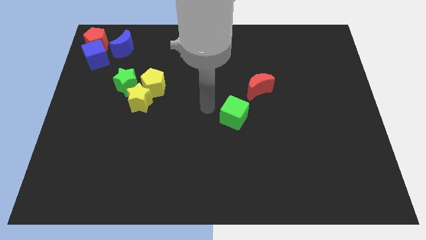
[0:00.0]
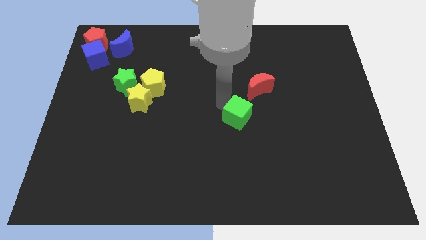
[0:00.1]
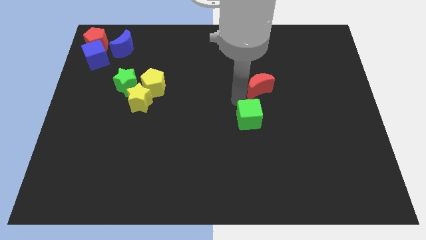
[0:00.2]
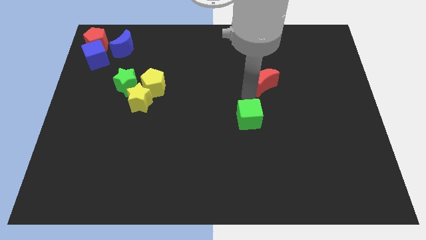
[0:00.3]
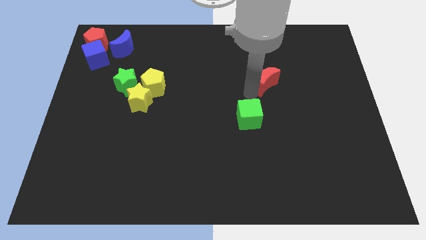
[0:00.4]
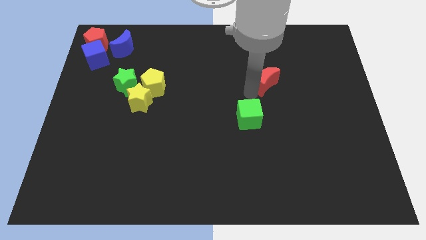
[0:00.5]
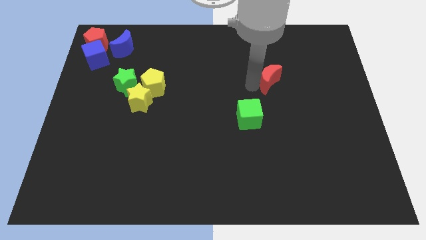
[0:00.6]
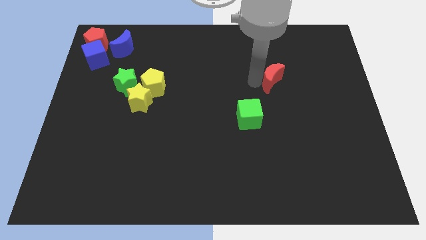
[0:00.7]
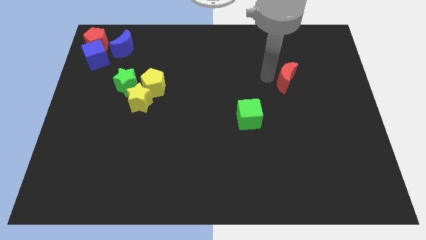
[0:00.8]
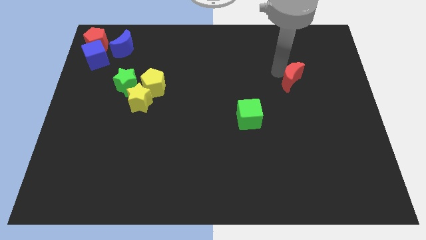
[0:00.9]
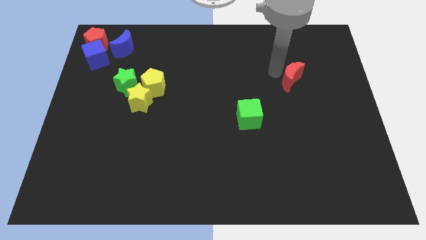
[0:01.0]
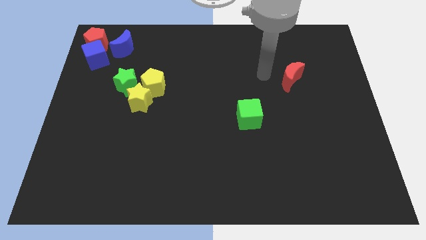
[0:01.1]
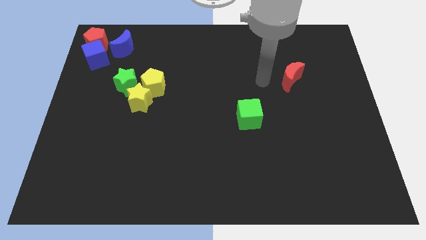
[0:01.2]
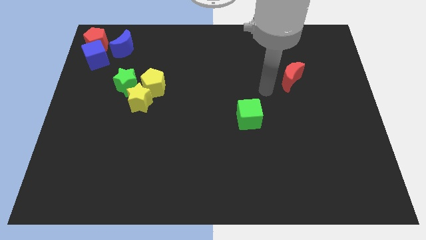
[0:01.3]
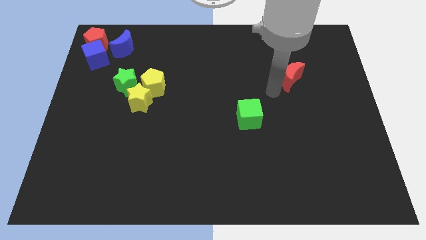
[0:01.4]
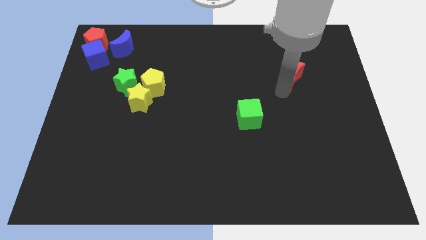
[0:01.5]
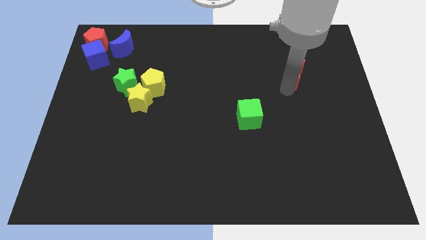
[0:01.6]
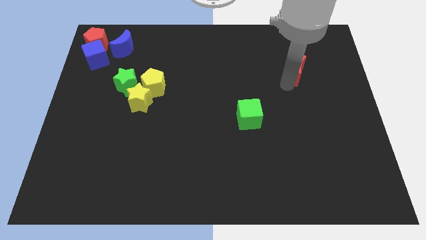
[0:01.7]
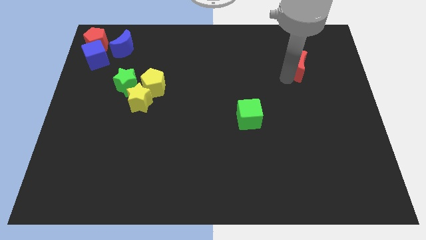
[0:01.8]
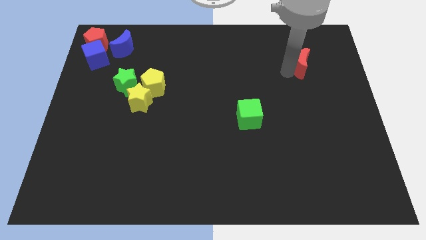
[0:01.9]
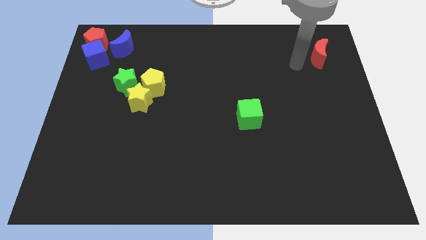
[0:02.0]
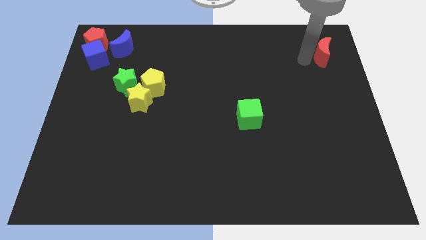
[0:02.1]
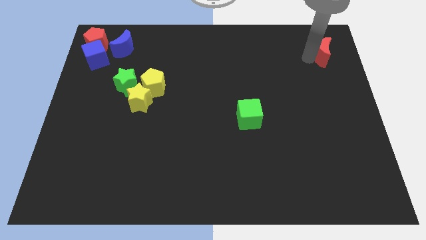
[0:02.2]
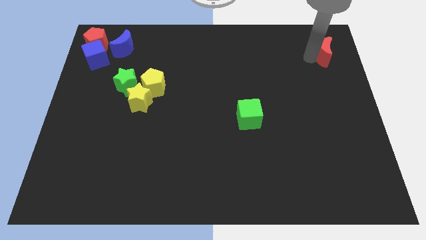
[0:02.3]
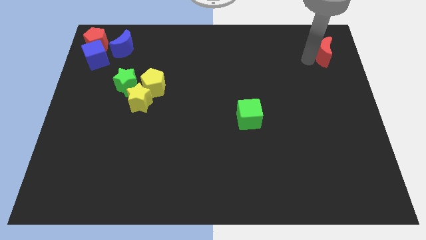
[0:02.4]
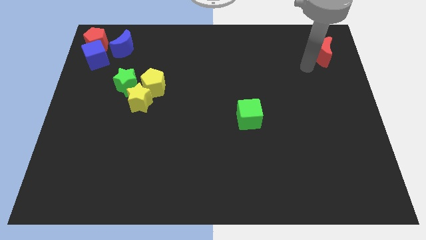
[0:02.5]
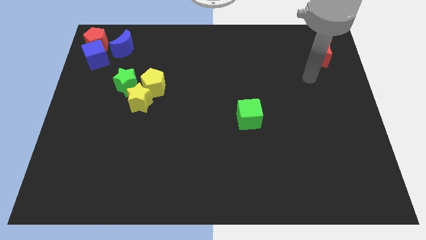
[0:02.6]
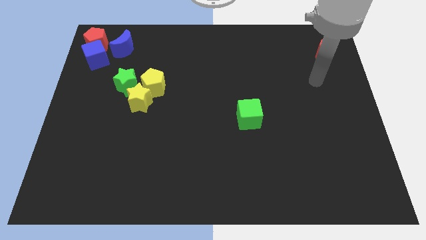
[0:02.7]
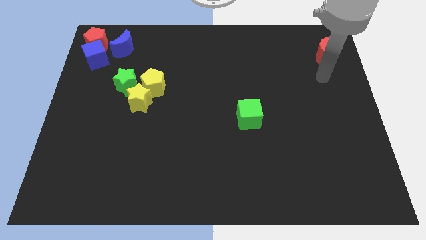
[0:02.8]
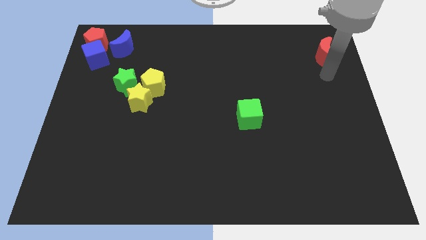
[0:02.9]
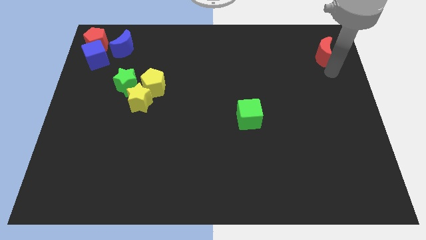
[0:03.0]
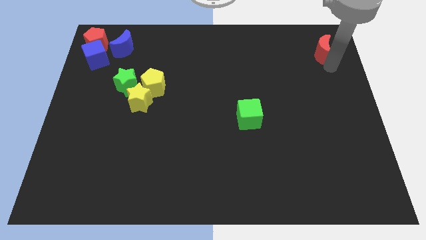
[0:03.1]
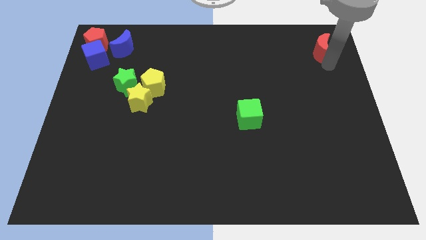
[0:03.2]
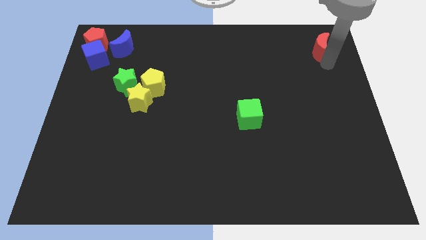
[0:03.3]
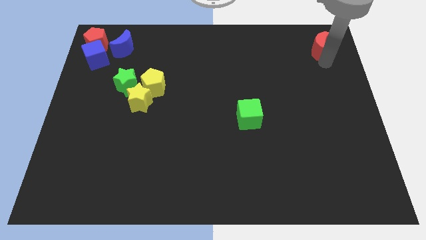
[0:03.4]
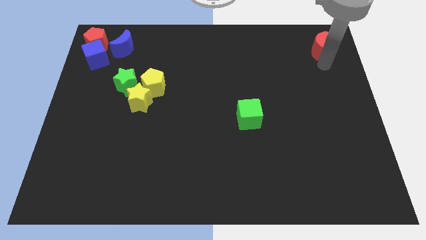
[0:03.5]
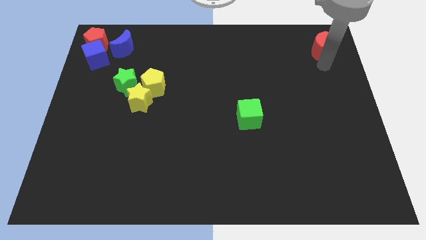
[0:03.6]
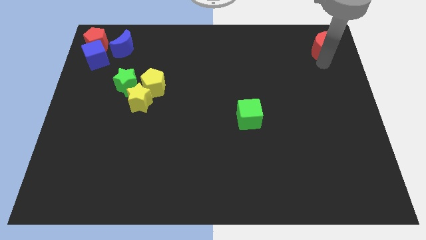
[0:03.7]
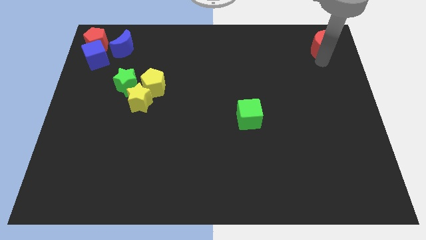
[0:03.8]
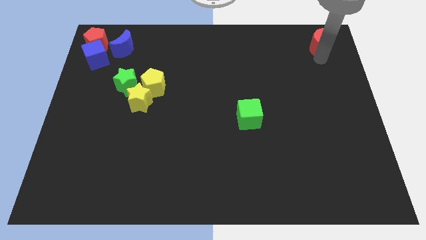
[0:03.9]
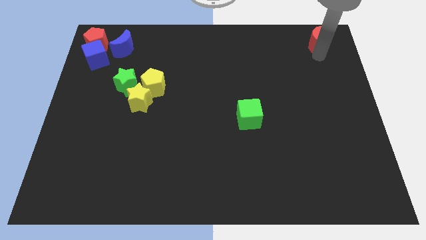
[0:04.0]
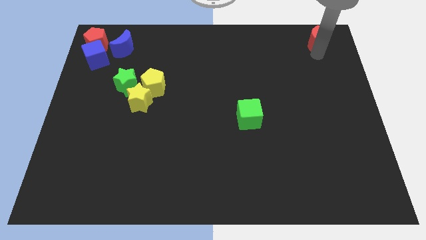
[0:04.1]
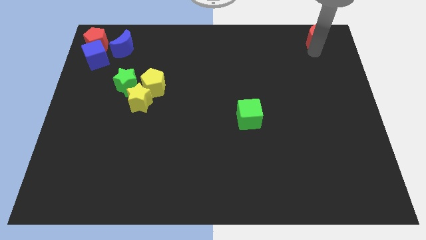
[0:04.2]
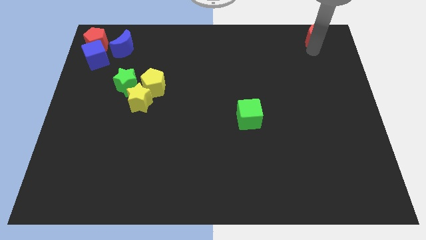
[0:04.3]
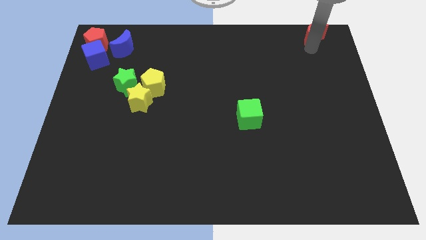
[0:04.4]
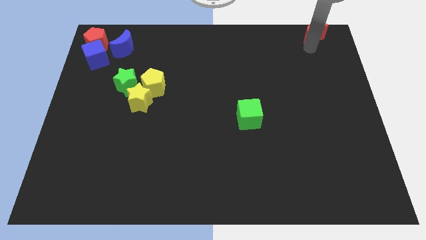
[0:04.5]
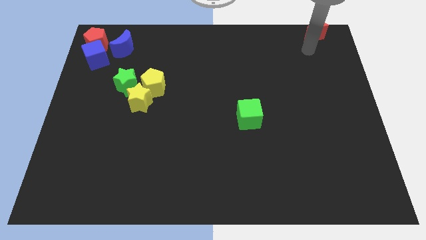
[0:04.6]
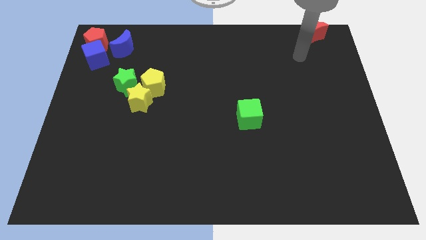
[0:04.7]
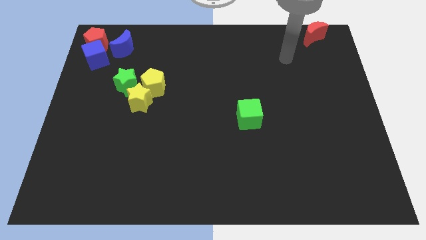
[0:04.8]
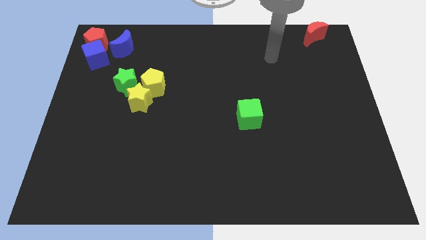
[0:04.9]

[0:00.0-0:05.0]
move the red crecent to the top right corner

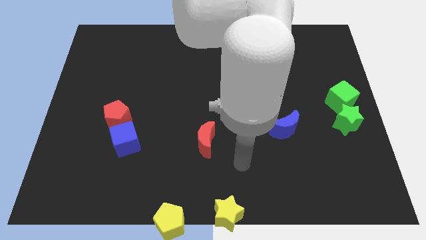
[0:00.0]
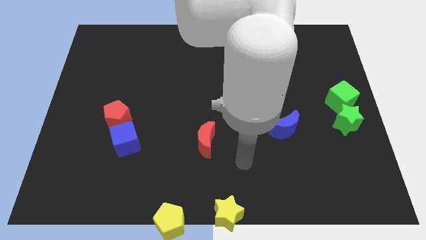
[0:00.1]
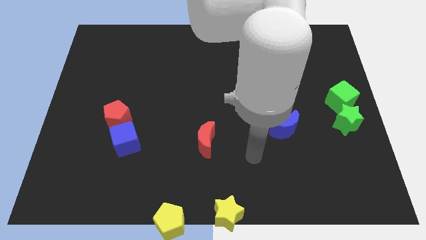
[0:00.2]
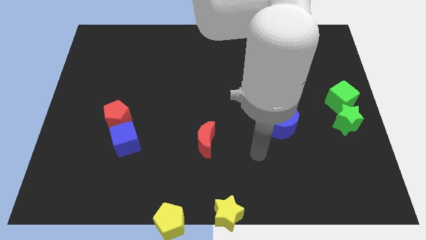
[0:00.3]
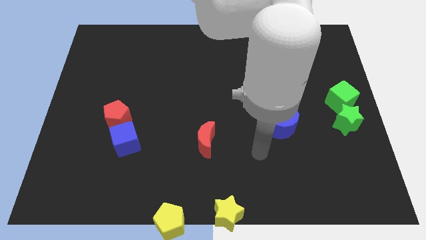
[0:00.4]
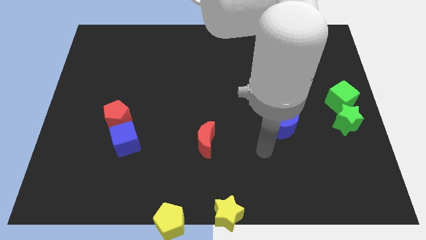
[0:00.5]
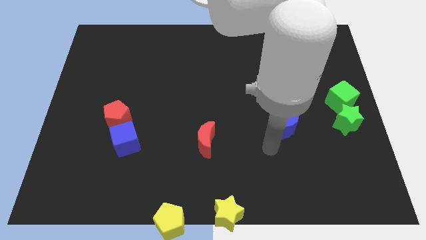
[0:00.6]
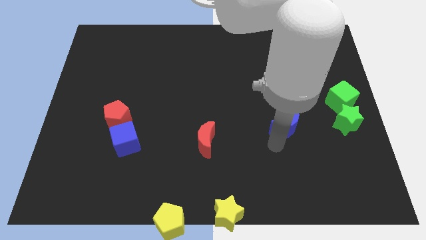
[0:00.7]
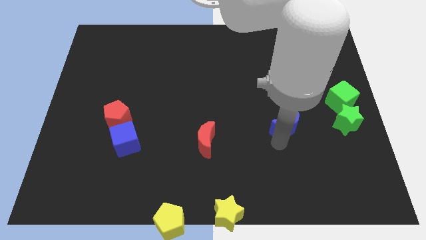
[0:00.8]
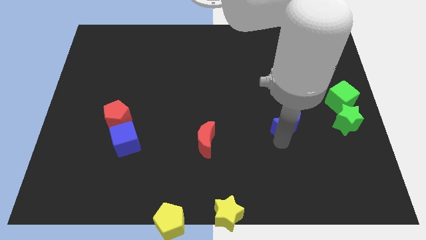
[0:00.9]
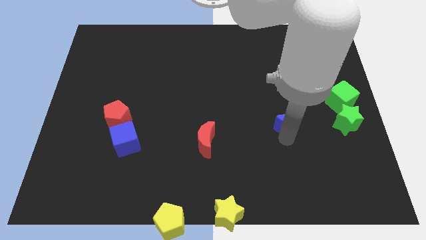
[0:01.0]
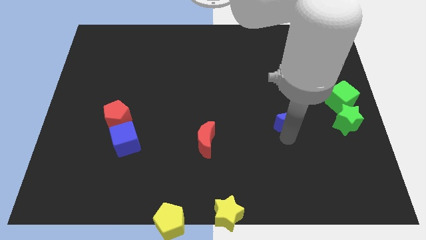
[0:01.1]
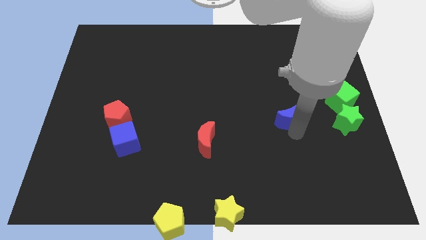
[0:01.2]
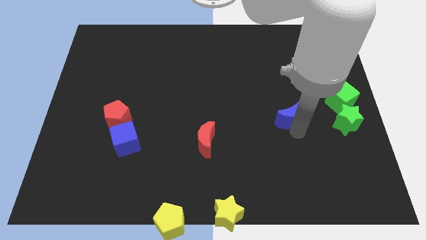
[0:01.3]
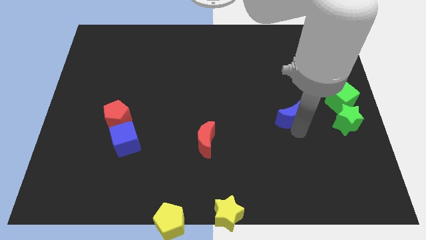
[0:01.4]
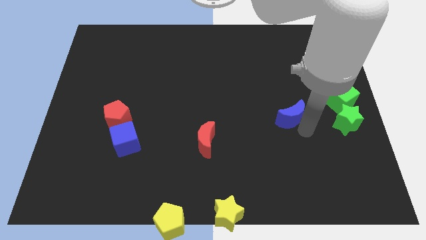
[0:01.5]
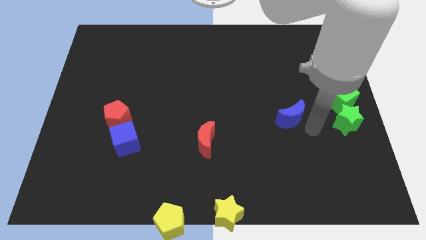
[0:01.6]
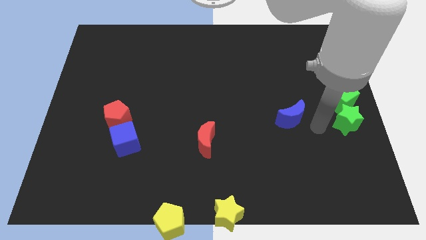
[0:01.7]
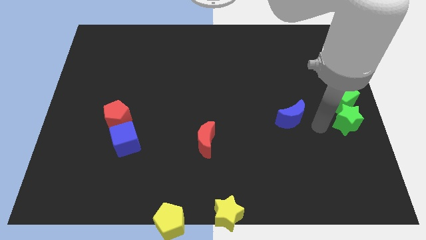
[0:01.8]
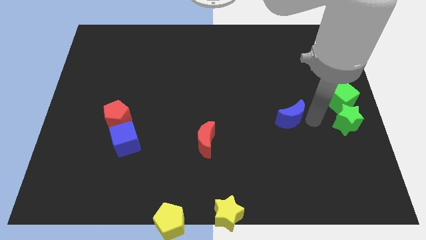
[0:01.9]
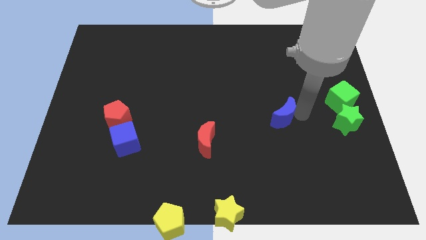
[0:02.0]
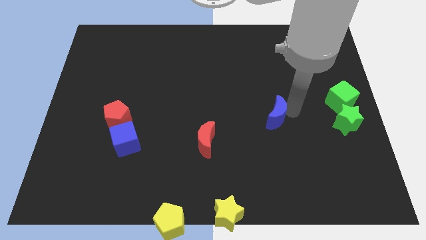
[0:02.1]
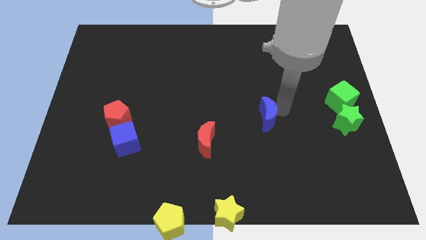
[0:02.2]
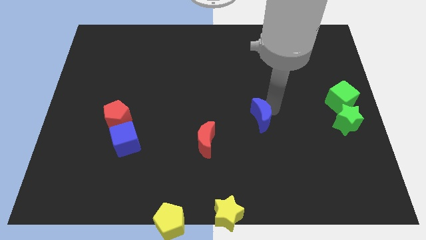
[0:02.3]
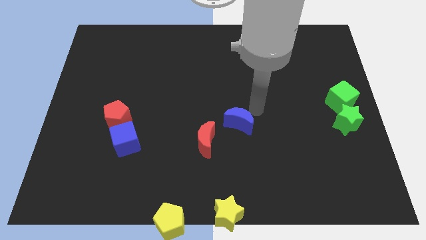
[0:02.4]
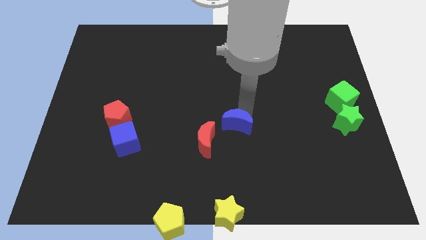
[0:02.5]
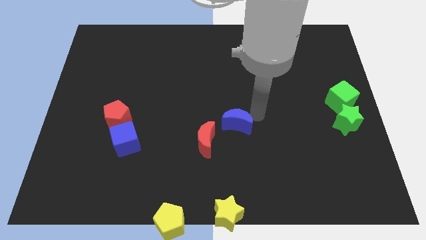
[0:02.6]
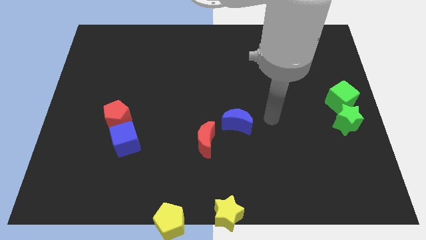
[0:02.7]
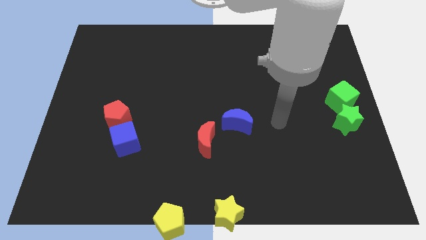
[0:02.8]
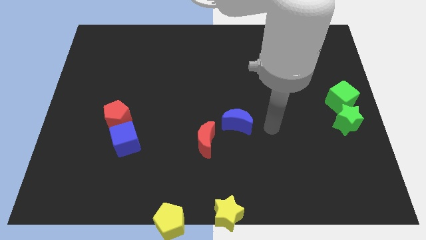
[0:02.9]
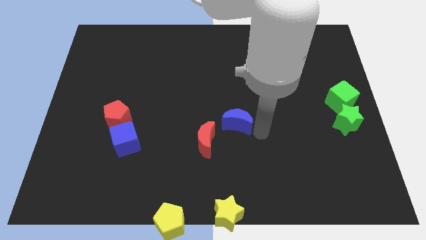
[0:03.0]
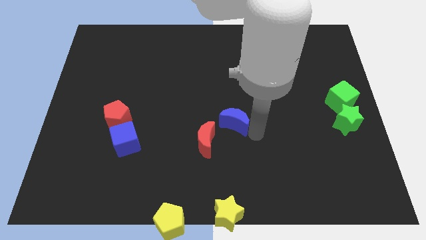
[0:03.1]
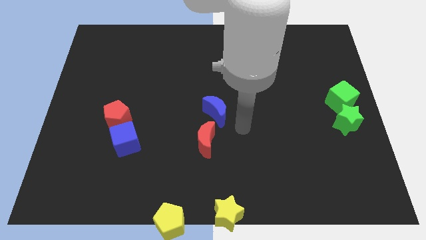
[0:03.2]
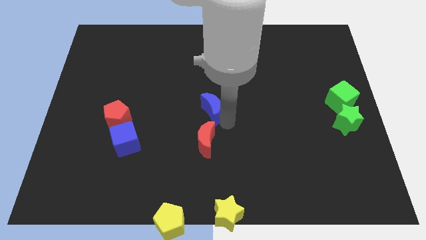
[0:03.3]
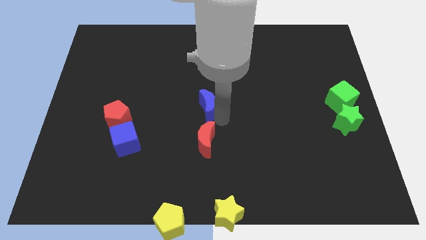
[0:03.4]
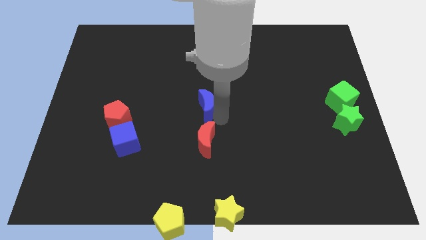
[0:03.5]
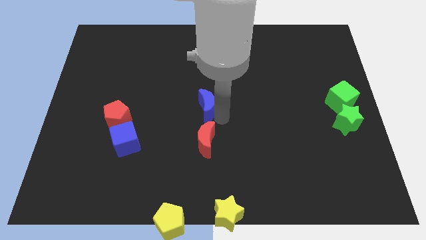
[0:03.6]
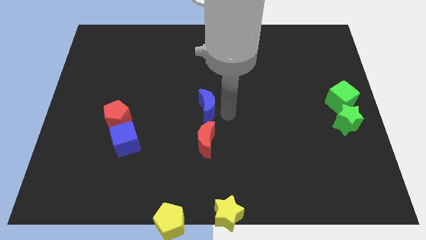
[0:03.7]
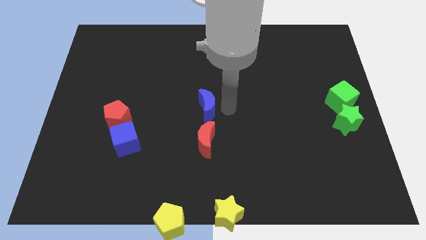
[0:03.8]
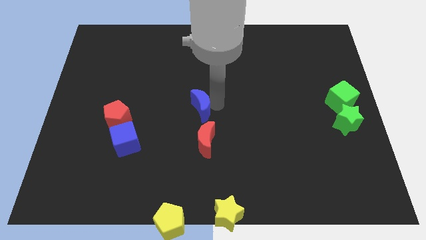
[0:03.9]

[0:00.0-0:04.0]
place the blue moon above the red moon

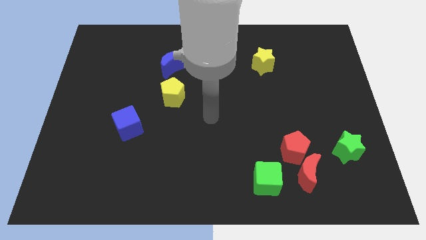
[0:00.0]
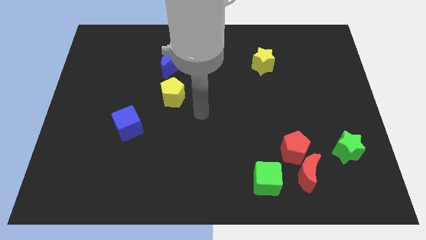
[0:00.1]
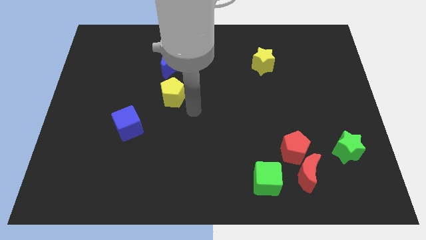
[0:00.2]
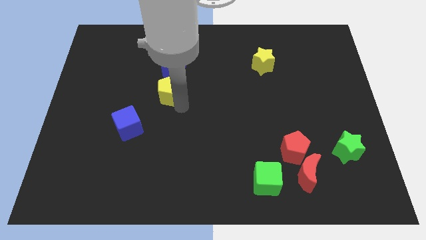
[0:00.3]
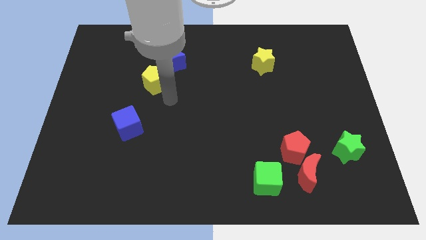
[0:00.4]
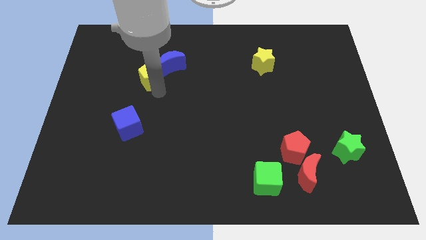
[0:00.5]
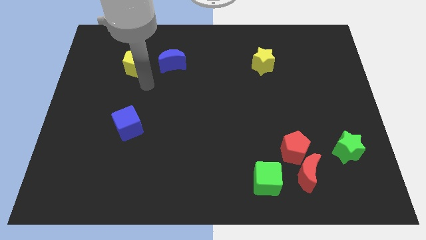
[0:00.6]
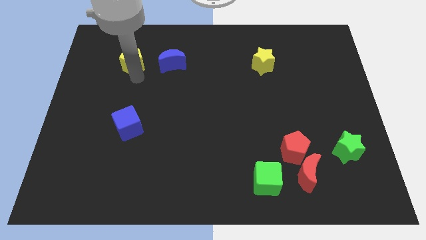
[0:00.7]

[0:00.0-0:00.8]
place the yellow pentagon parallel left to blue moon
